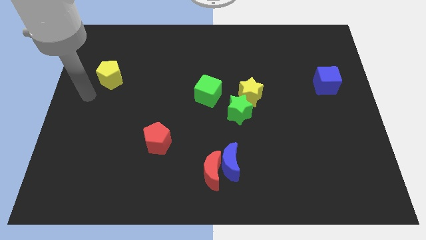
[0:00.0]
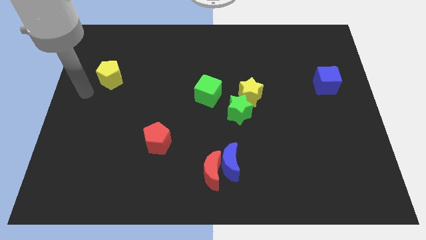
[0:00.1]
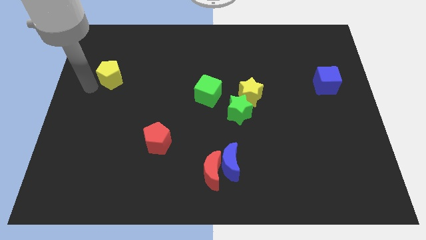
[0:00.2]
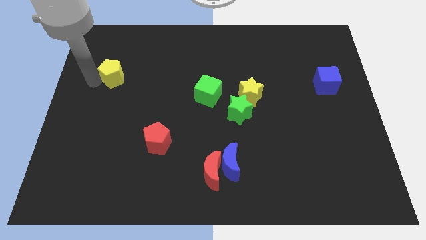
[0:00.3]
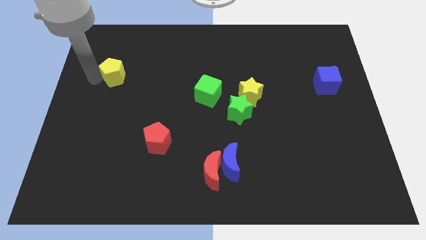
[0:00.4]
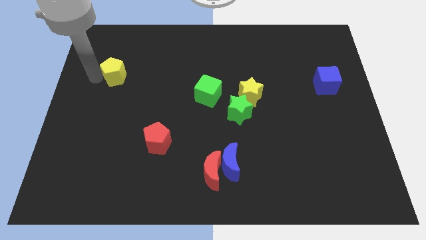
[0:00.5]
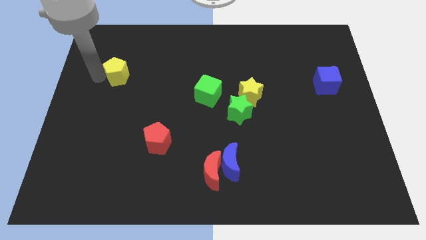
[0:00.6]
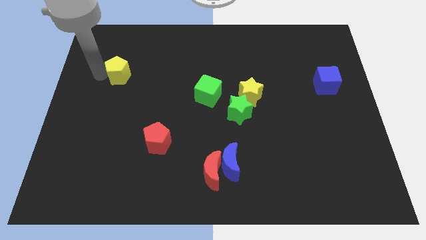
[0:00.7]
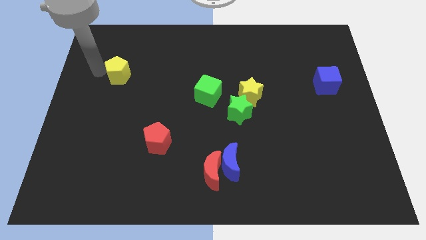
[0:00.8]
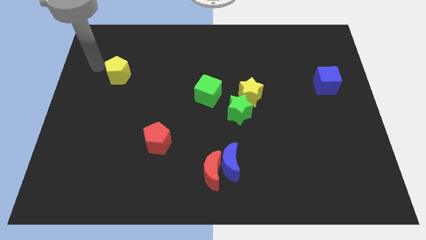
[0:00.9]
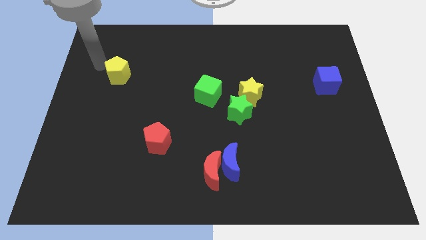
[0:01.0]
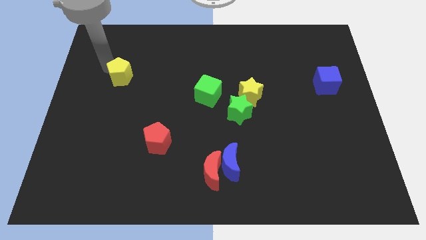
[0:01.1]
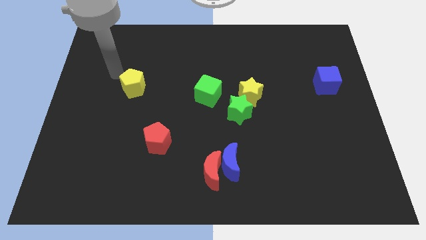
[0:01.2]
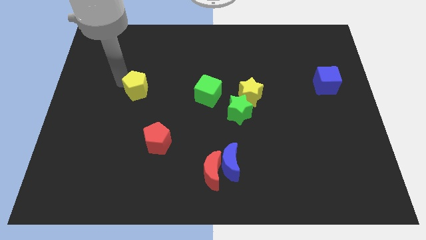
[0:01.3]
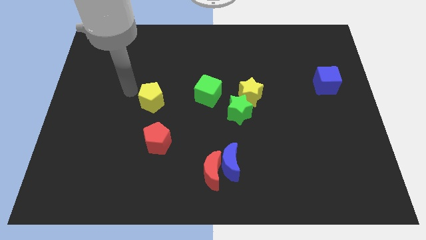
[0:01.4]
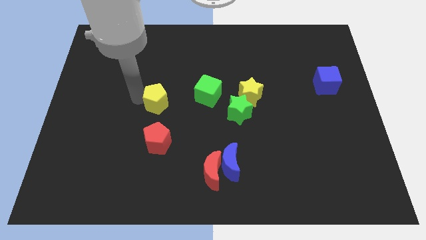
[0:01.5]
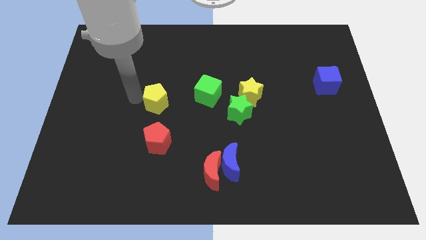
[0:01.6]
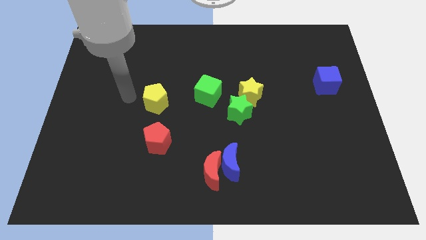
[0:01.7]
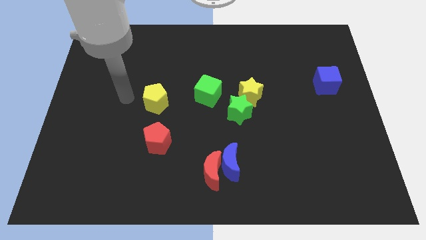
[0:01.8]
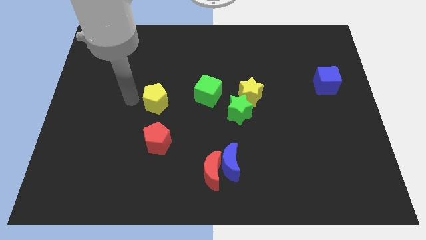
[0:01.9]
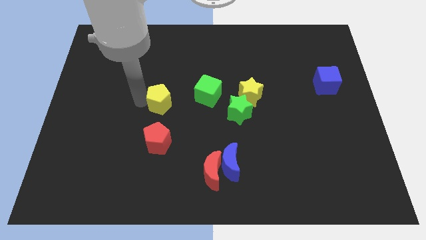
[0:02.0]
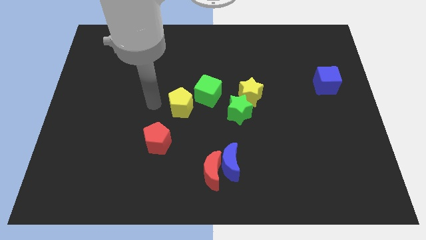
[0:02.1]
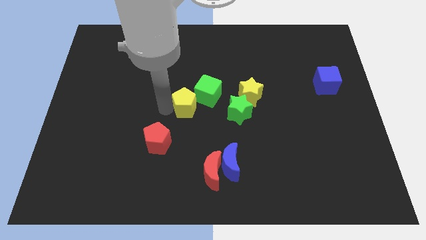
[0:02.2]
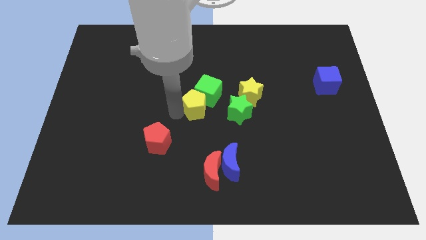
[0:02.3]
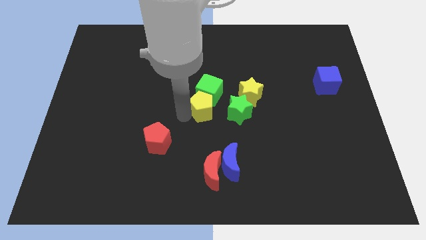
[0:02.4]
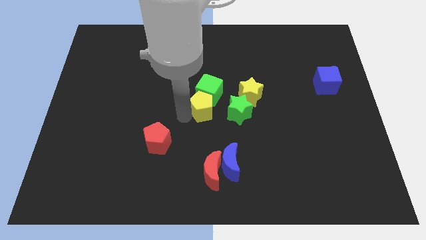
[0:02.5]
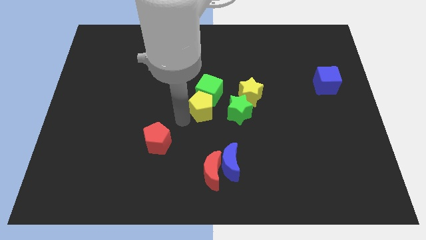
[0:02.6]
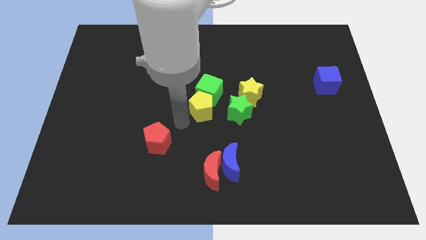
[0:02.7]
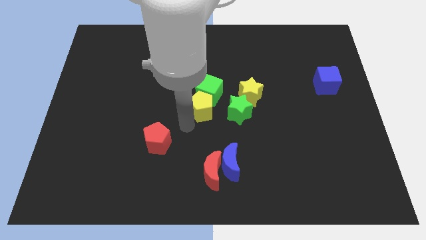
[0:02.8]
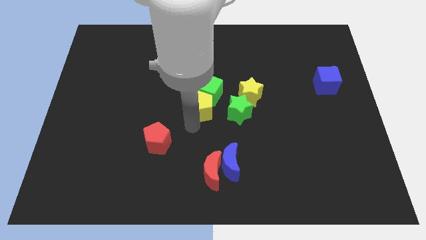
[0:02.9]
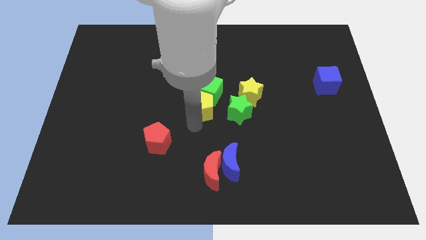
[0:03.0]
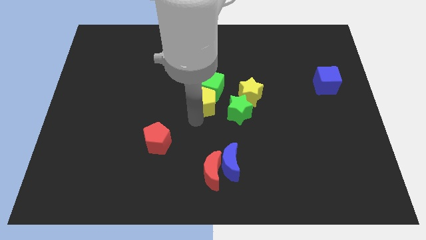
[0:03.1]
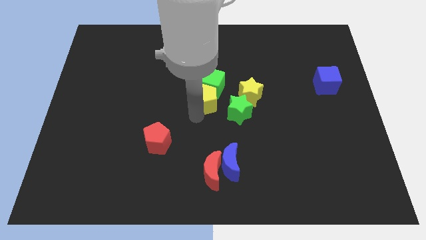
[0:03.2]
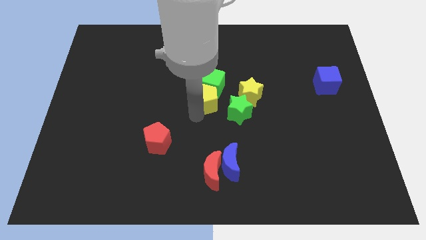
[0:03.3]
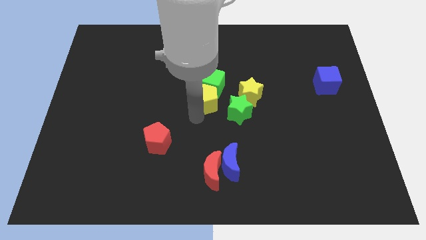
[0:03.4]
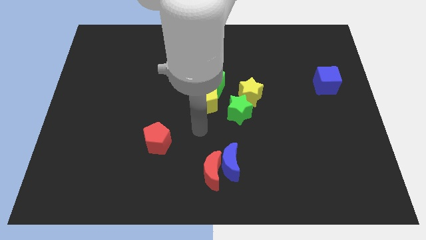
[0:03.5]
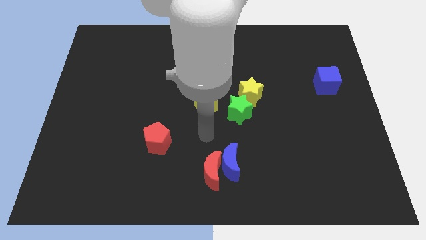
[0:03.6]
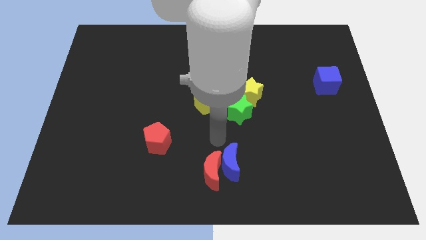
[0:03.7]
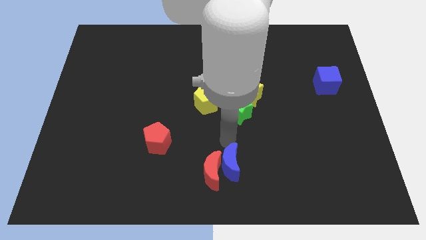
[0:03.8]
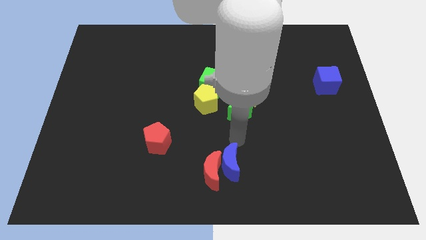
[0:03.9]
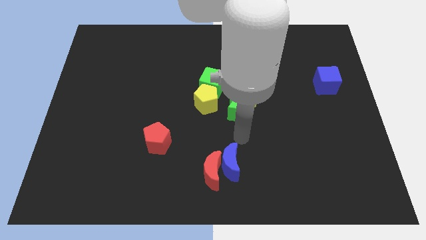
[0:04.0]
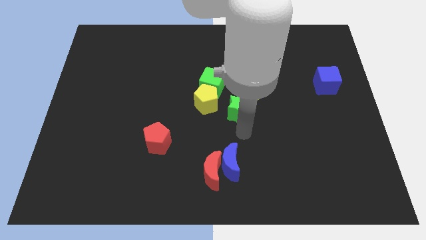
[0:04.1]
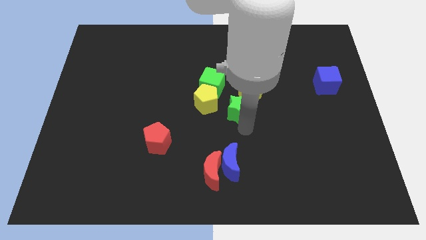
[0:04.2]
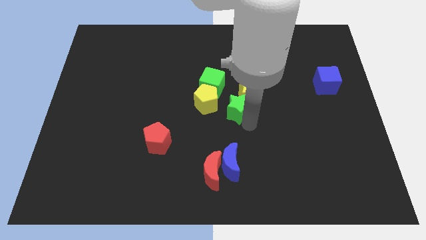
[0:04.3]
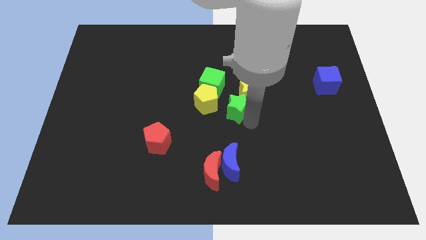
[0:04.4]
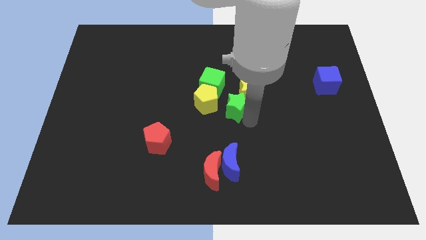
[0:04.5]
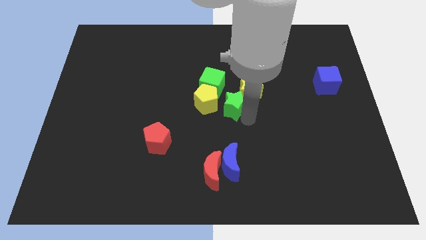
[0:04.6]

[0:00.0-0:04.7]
put the yellow pentagon to the bottom of the green cube

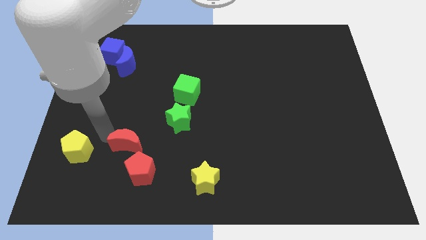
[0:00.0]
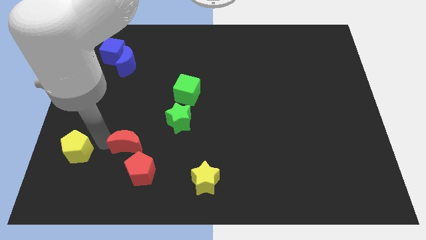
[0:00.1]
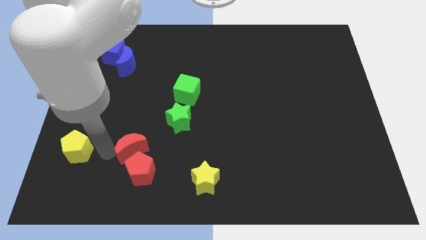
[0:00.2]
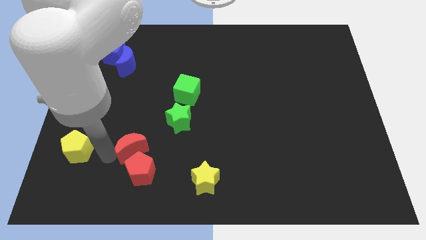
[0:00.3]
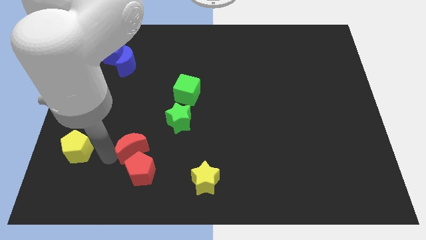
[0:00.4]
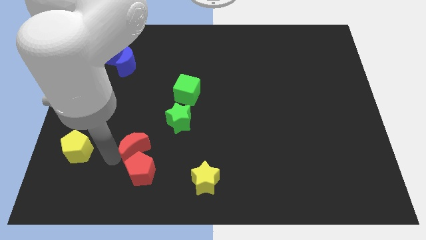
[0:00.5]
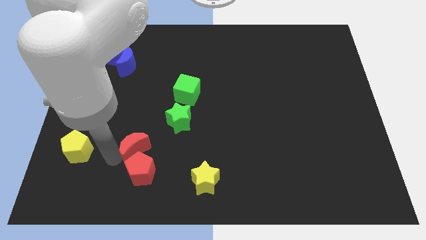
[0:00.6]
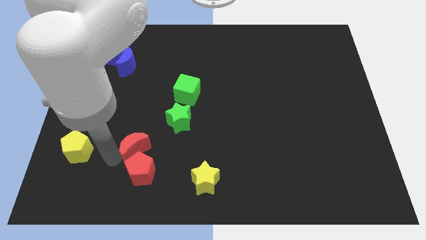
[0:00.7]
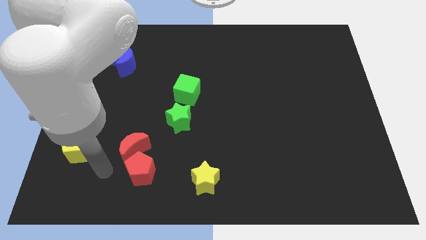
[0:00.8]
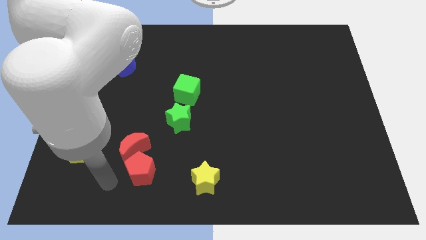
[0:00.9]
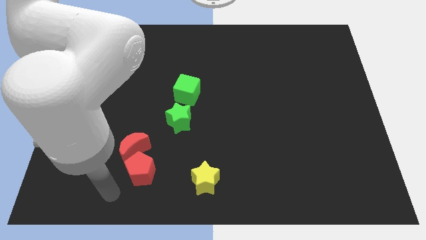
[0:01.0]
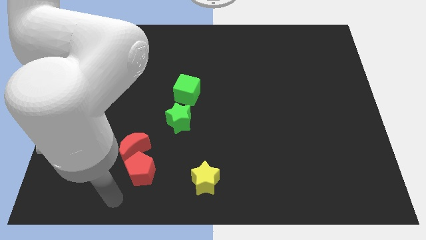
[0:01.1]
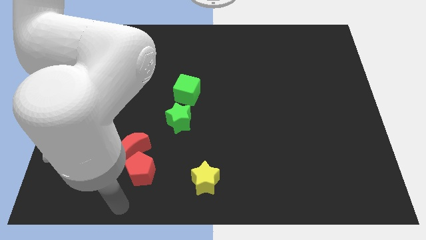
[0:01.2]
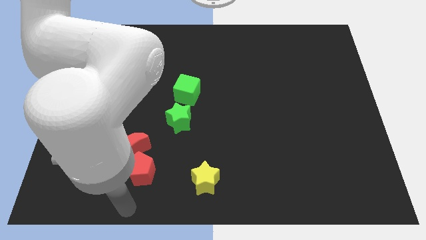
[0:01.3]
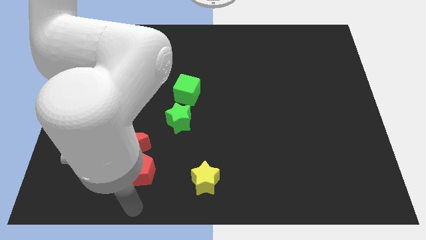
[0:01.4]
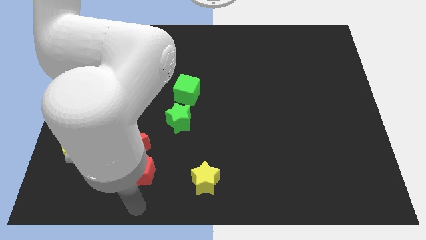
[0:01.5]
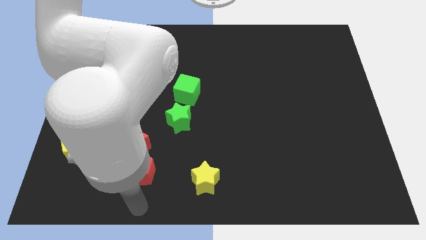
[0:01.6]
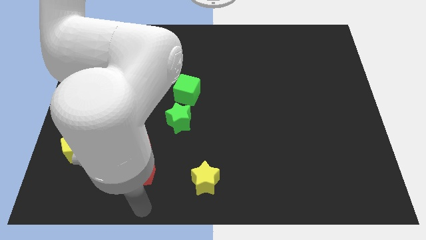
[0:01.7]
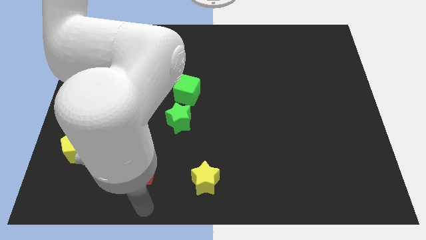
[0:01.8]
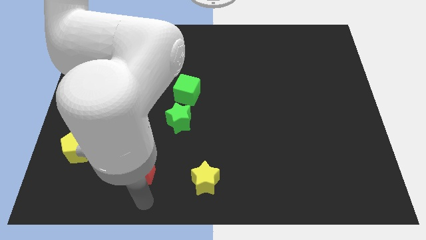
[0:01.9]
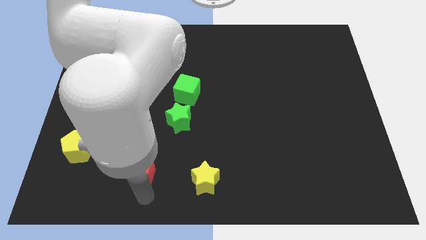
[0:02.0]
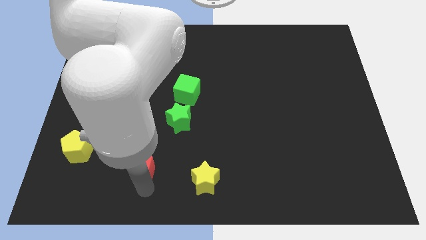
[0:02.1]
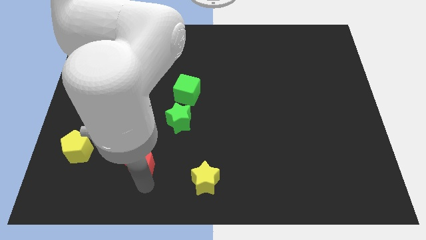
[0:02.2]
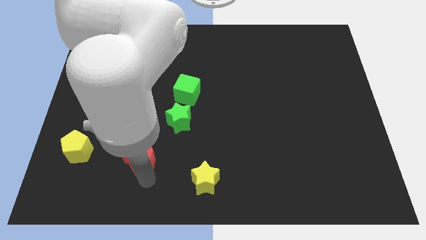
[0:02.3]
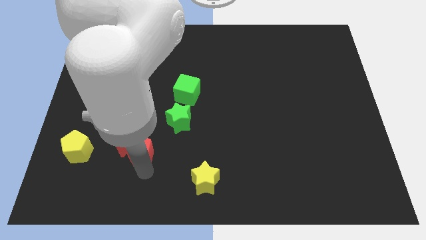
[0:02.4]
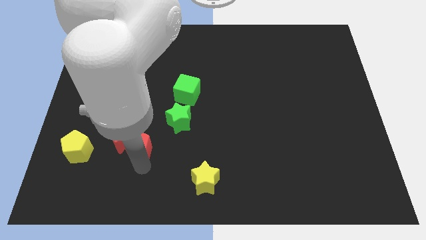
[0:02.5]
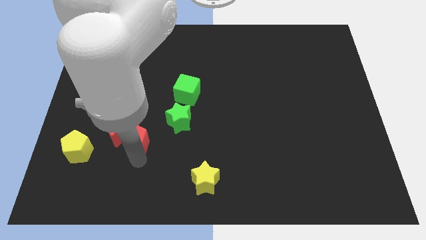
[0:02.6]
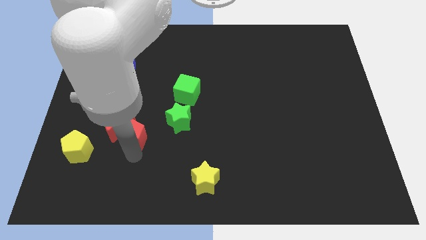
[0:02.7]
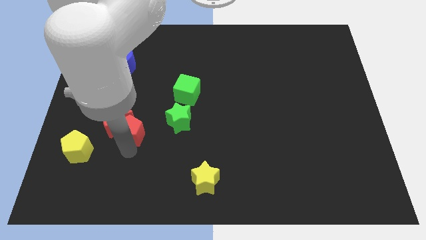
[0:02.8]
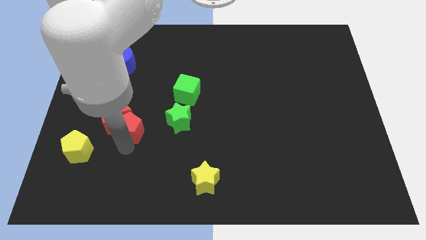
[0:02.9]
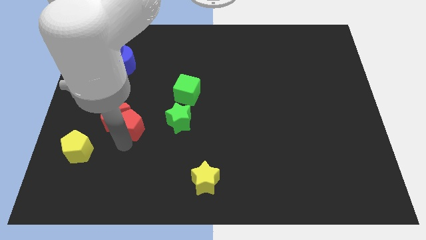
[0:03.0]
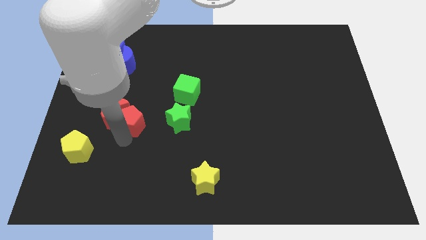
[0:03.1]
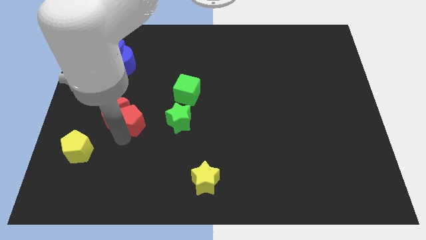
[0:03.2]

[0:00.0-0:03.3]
move the red blocks towards the blue blocks

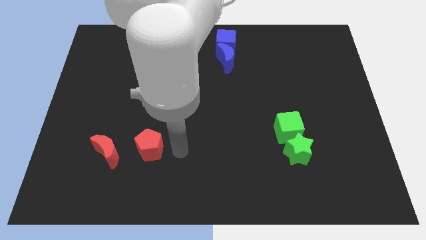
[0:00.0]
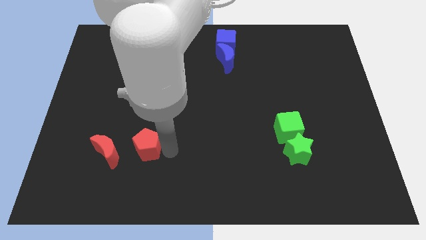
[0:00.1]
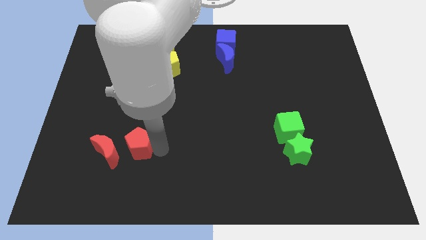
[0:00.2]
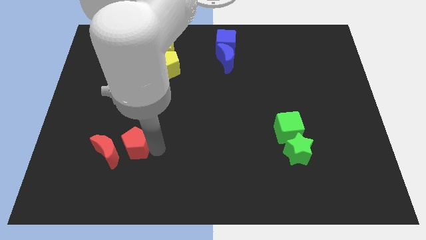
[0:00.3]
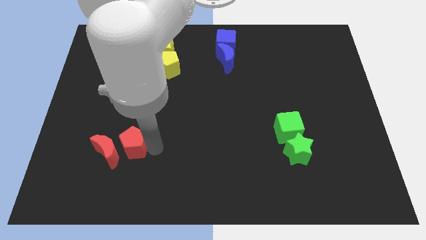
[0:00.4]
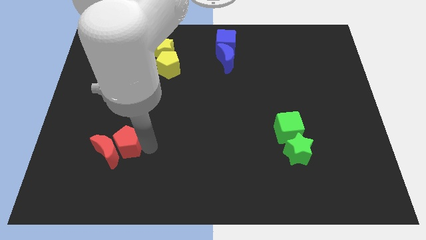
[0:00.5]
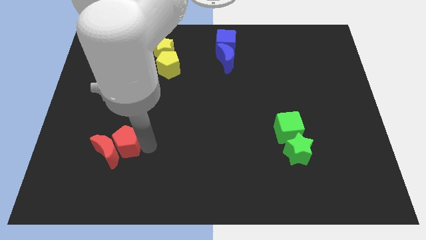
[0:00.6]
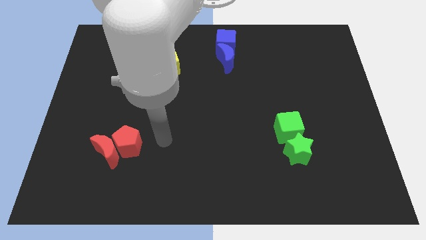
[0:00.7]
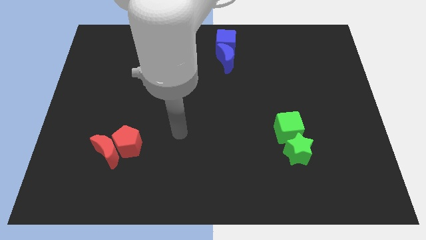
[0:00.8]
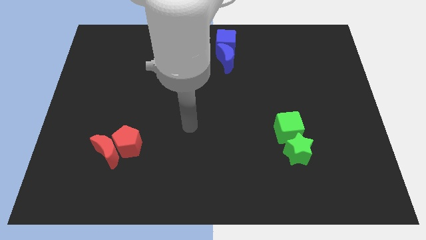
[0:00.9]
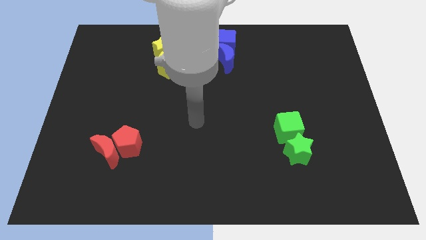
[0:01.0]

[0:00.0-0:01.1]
place the red pentagon to the right of the red moon
